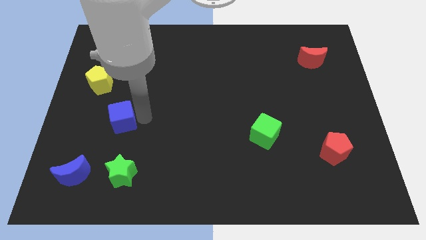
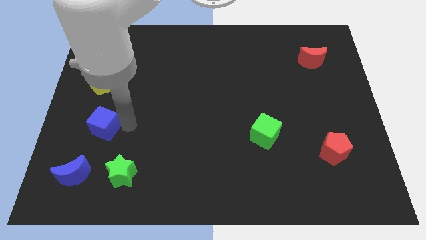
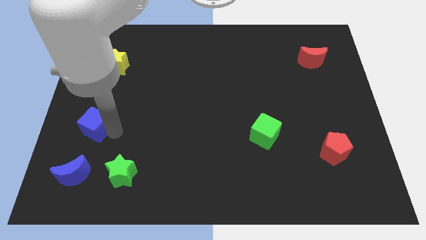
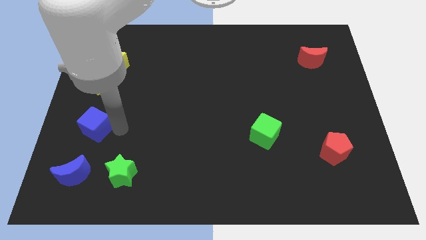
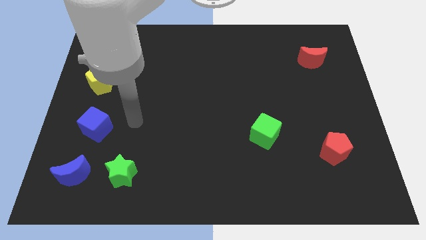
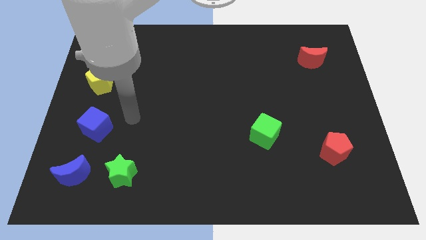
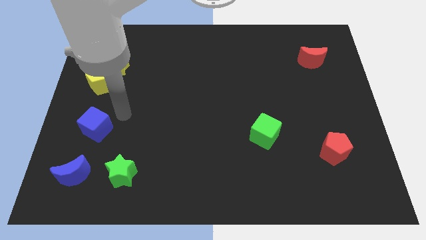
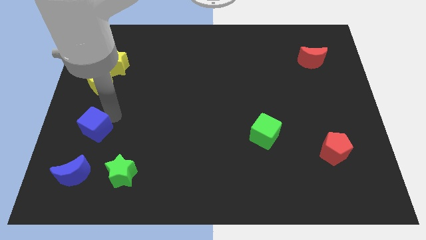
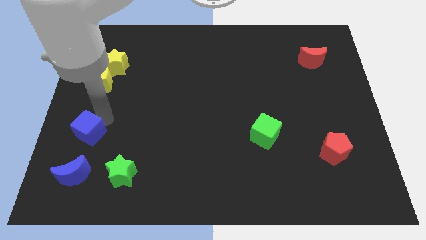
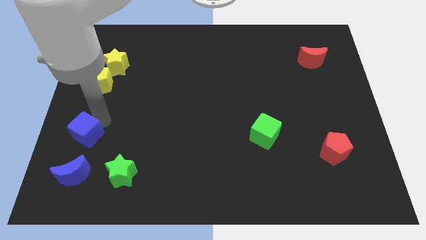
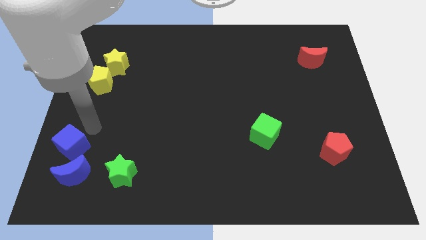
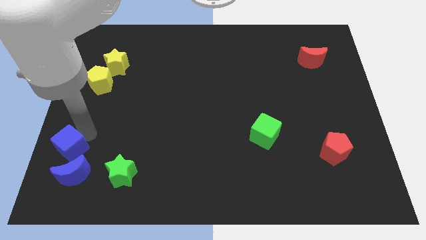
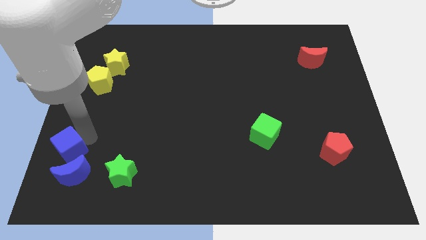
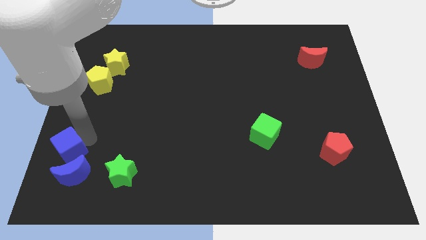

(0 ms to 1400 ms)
move the blue cube close to the blue moon

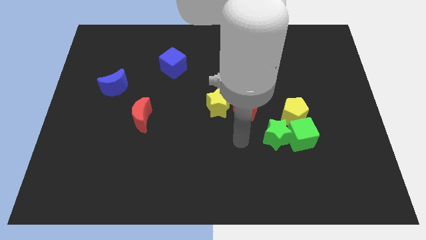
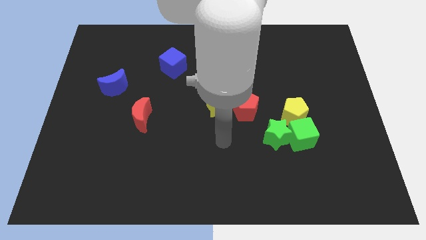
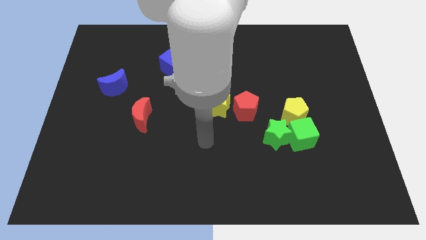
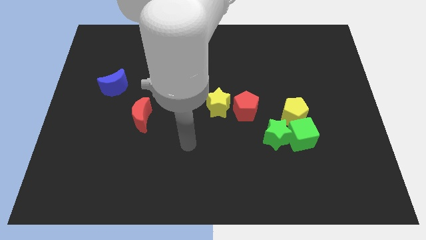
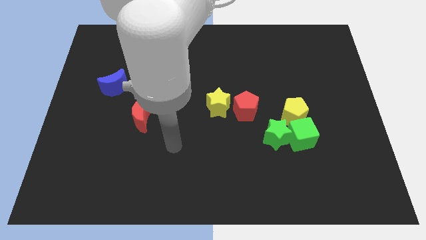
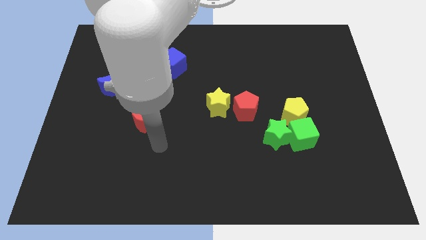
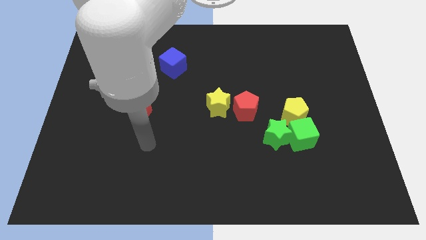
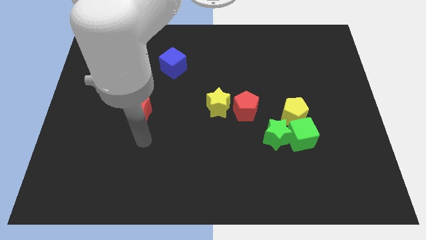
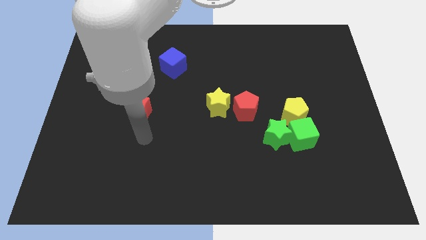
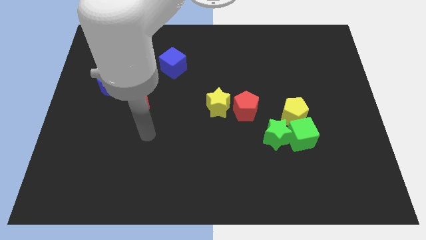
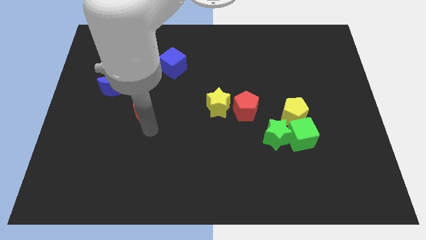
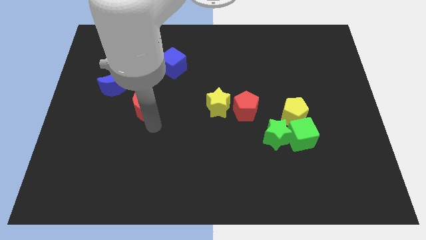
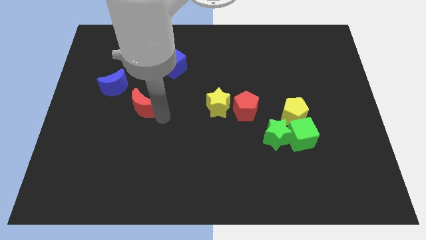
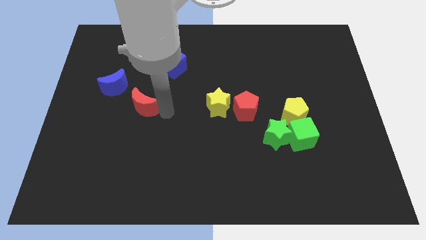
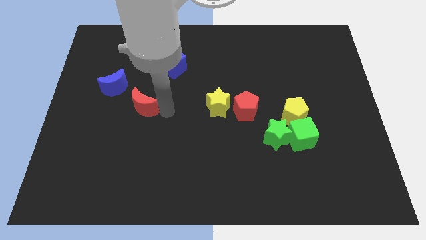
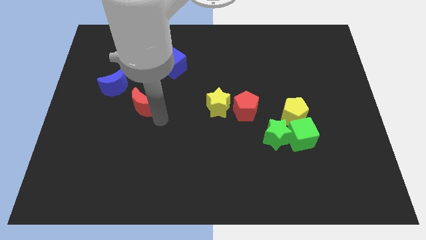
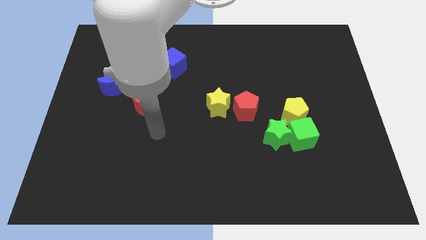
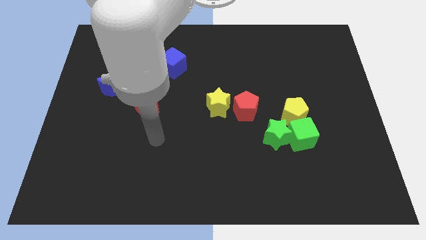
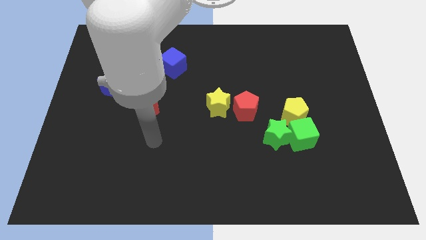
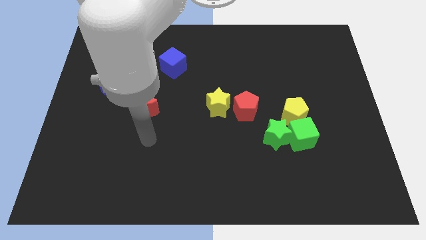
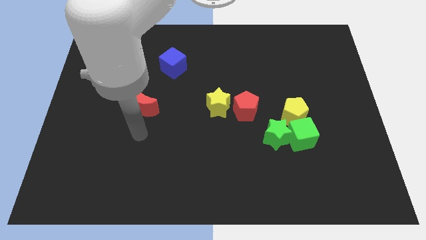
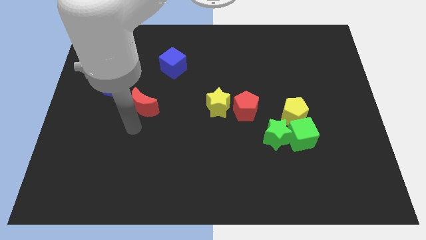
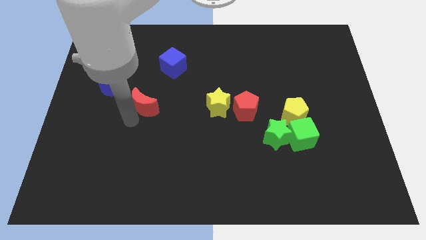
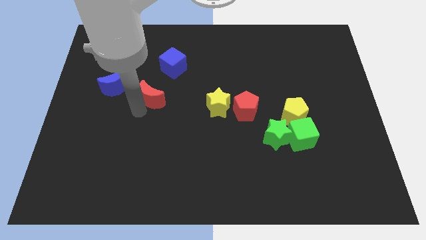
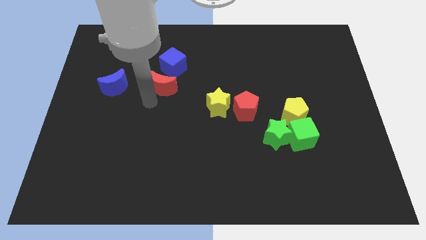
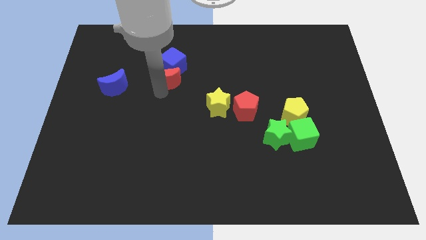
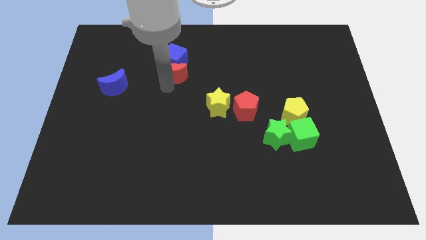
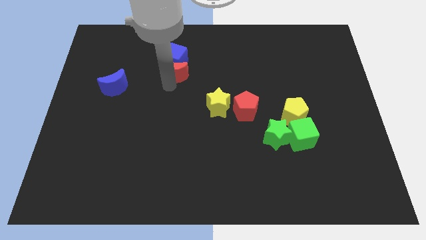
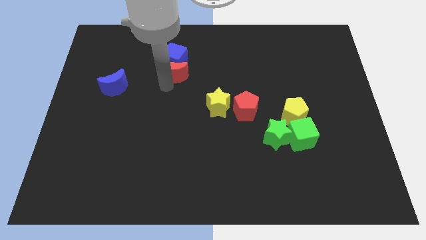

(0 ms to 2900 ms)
push the red moon into the blue cube

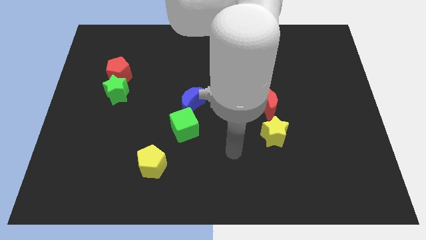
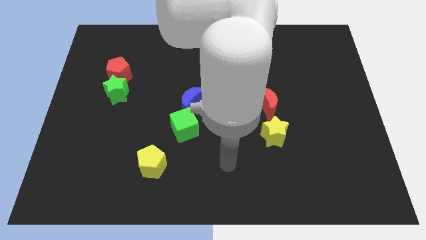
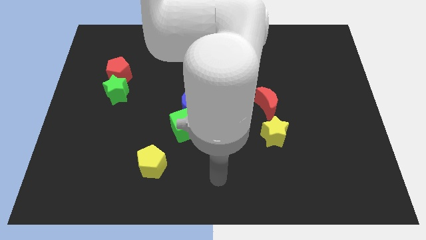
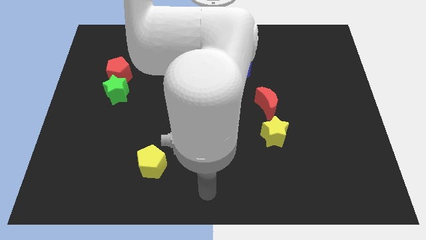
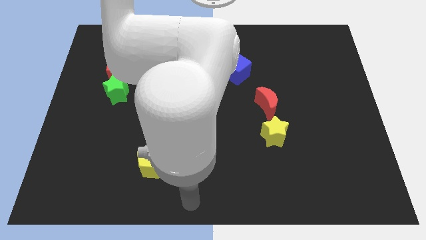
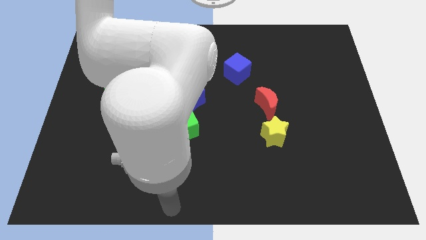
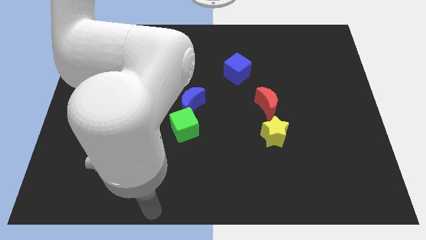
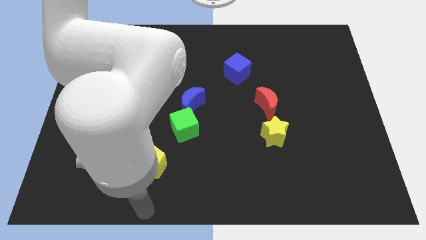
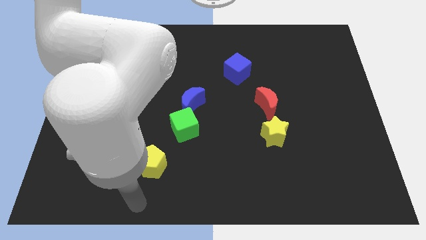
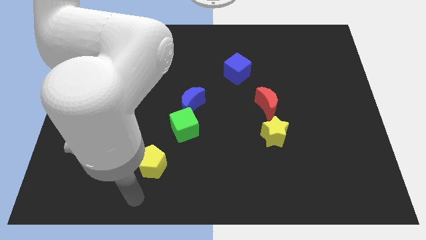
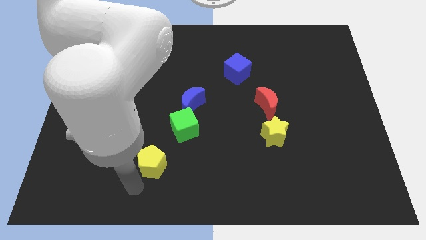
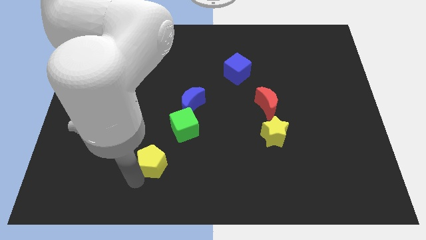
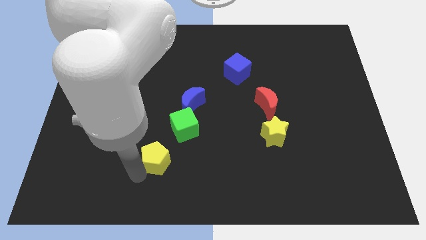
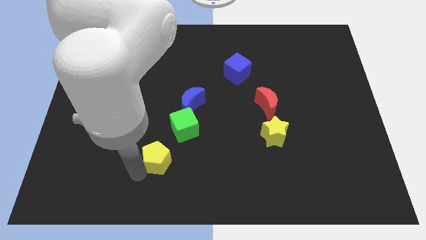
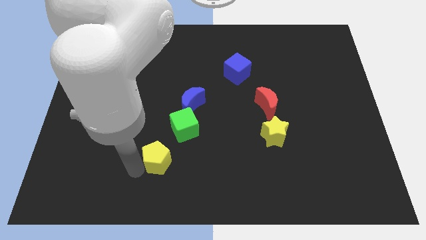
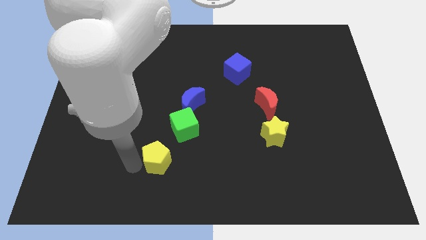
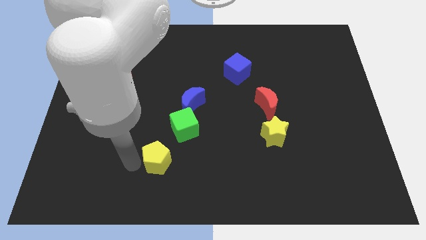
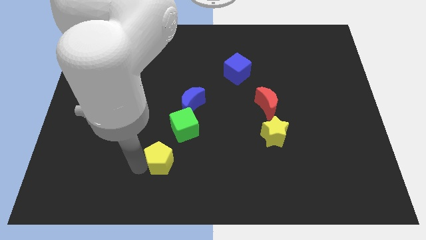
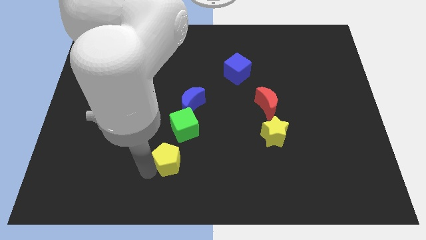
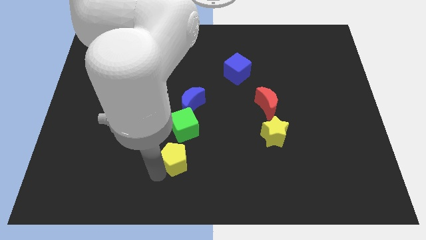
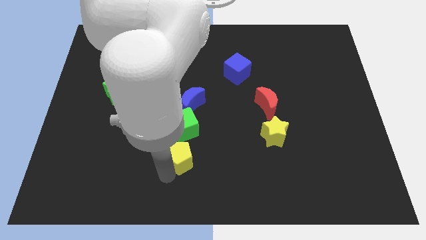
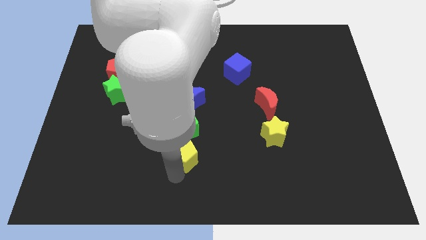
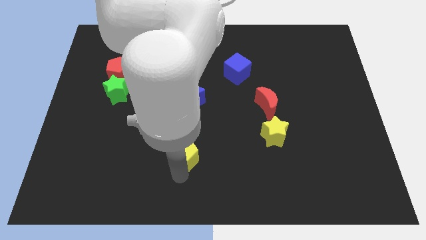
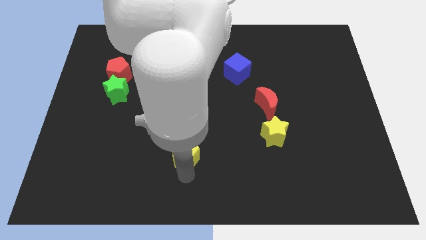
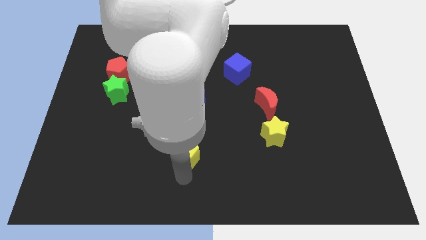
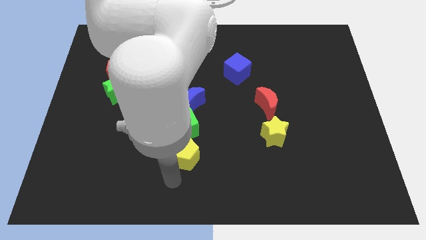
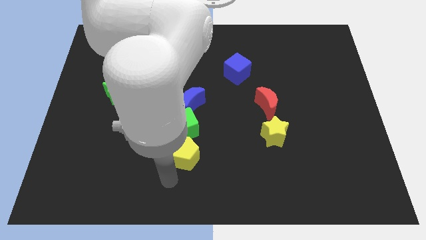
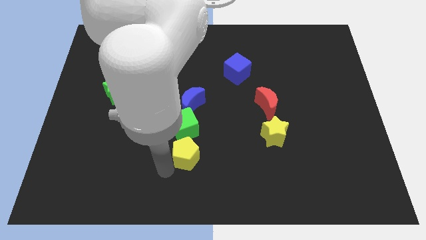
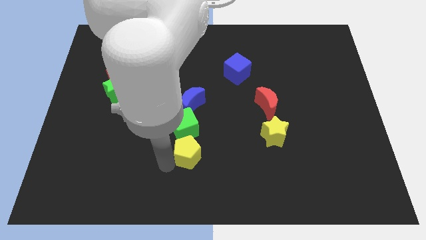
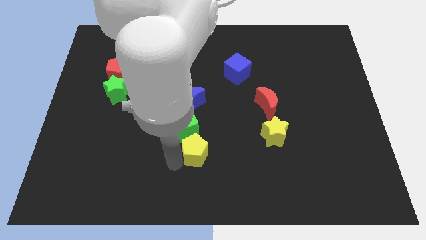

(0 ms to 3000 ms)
push the yellow pentagon into the green cube

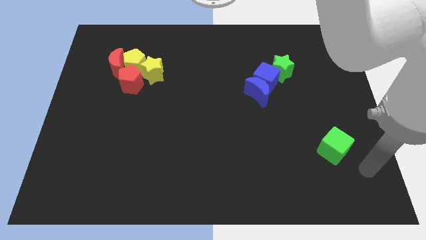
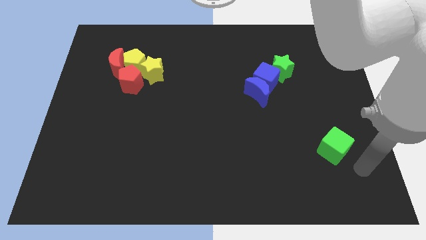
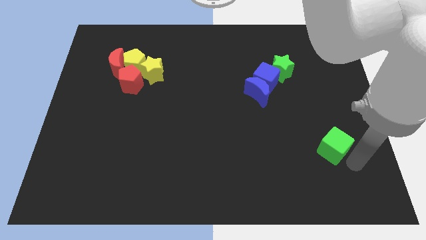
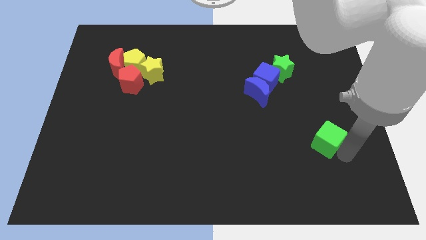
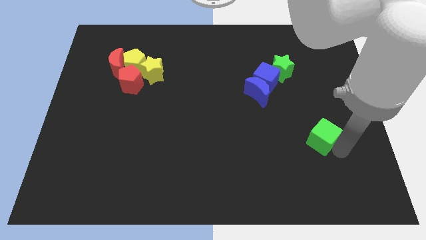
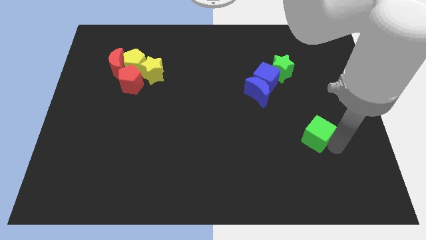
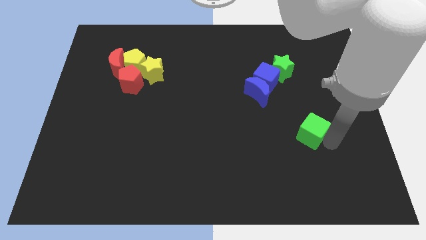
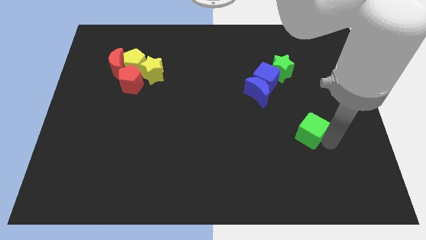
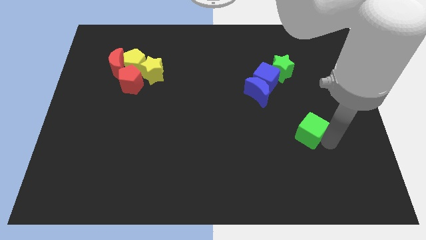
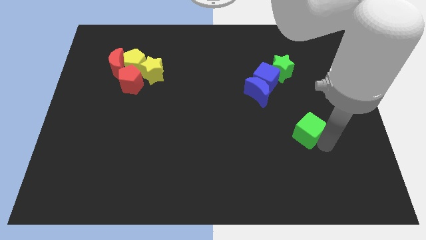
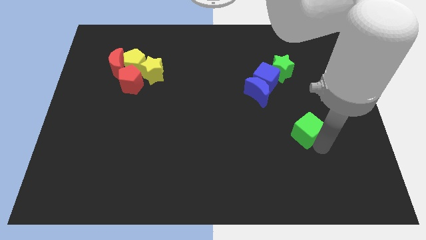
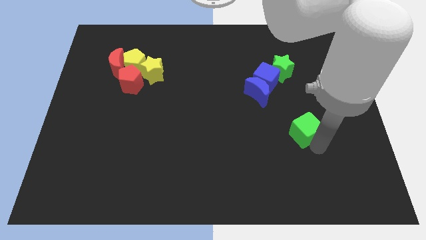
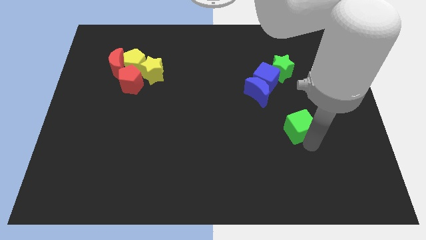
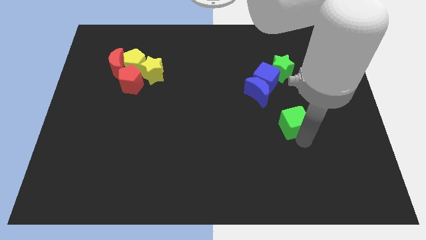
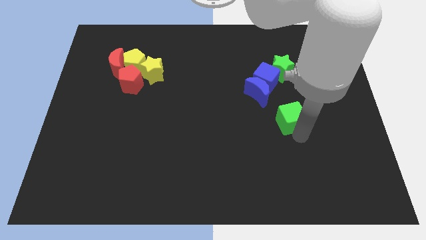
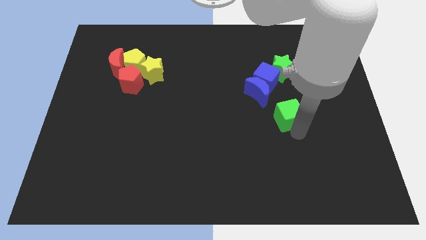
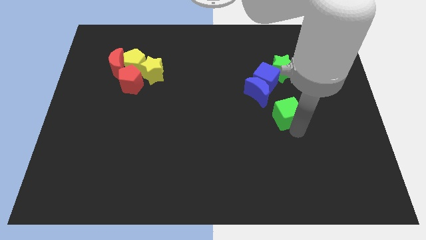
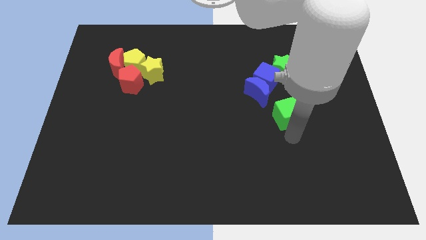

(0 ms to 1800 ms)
move the green cube with arm
